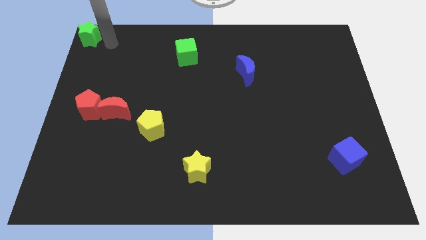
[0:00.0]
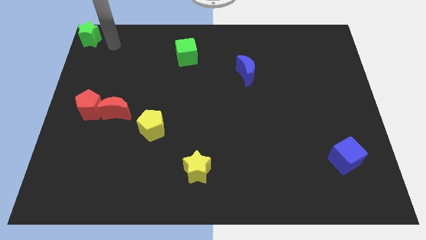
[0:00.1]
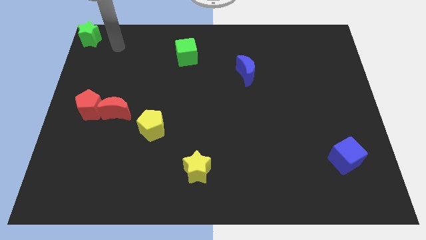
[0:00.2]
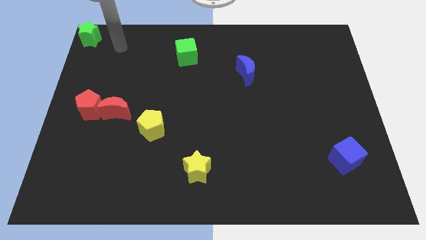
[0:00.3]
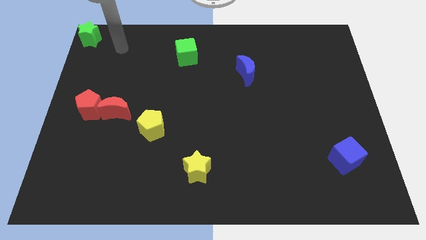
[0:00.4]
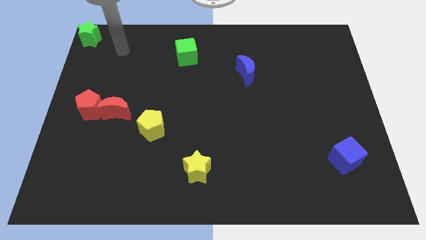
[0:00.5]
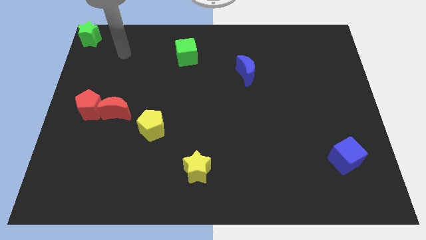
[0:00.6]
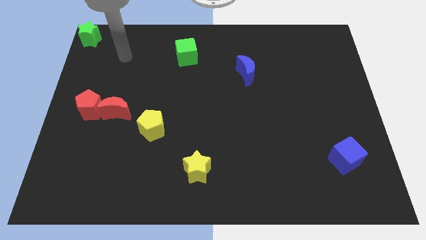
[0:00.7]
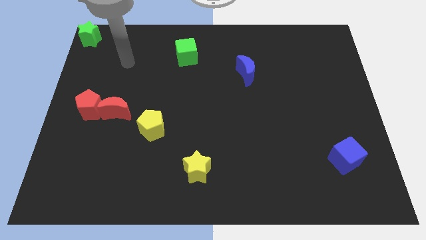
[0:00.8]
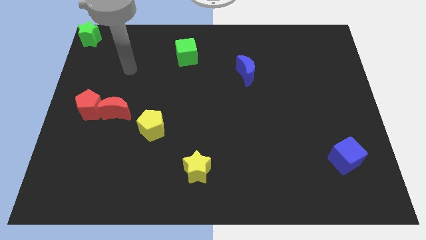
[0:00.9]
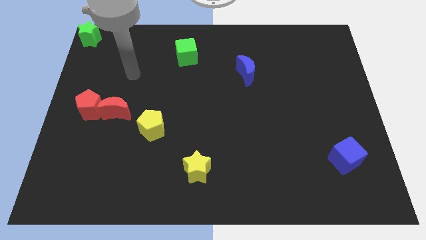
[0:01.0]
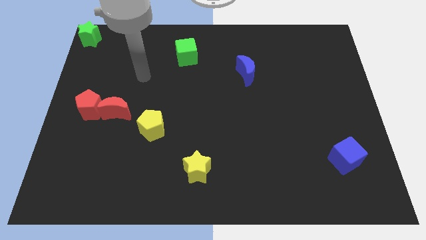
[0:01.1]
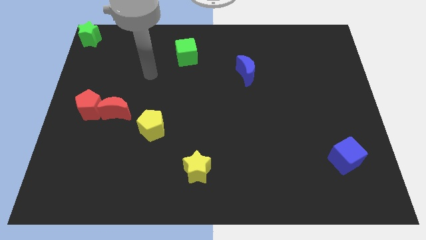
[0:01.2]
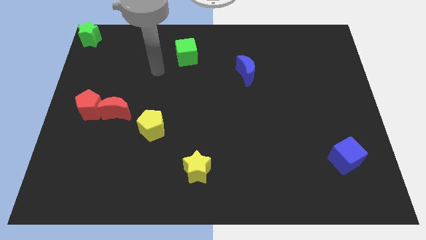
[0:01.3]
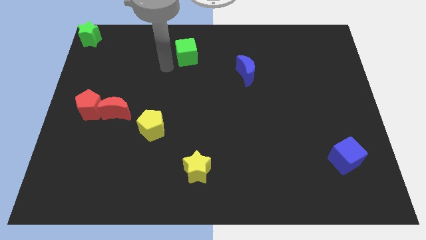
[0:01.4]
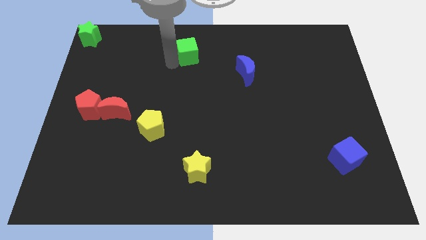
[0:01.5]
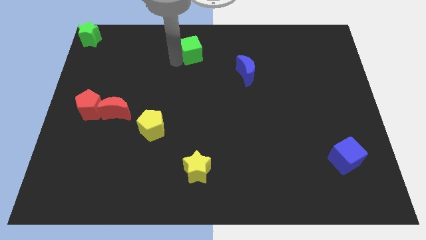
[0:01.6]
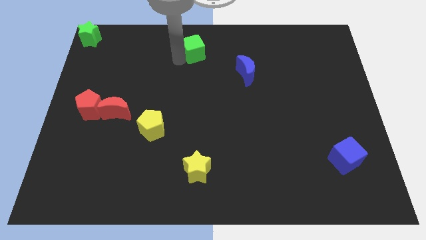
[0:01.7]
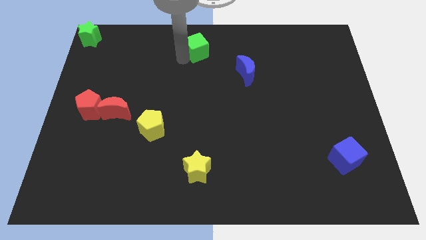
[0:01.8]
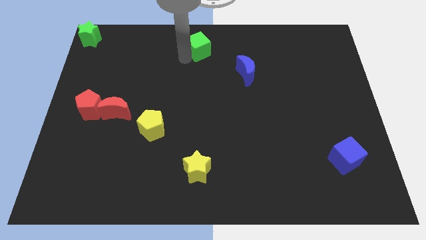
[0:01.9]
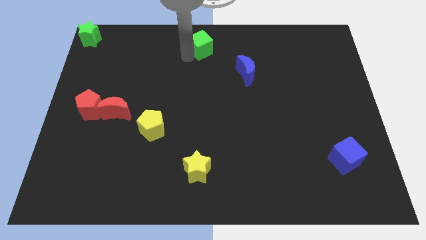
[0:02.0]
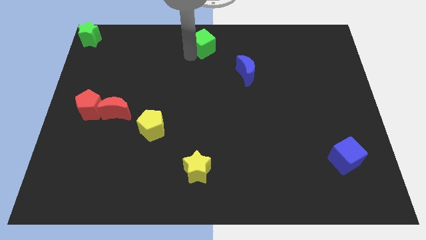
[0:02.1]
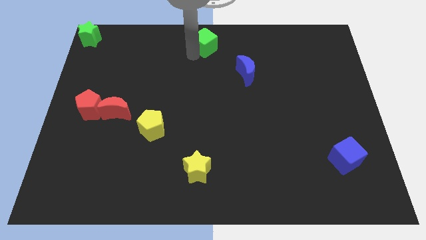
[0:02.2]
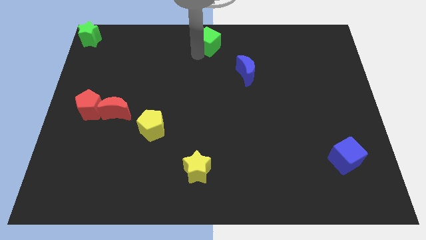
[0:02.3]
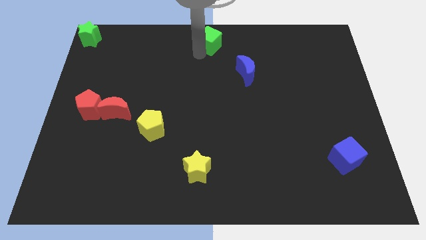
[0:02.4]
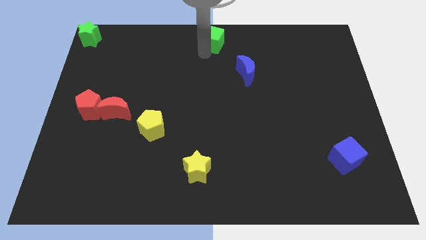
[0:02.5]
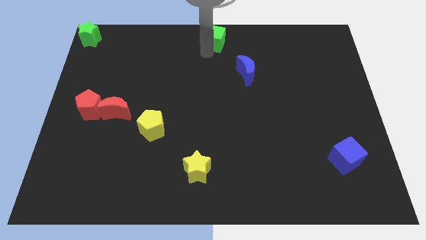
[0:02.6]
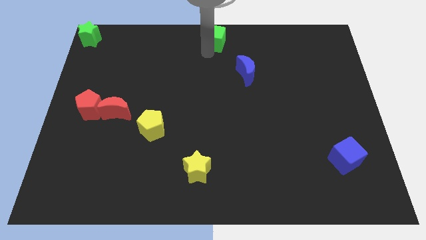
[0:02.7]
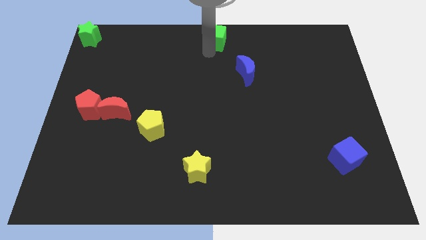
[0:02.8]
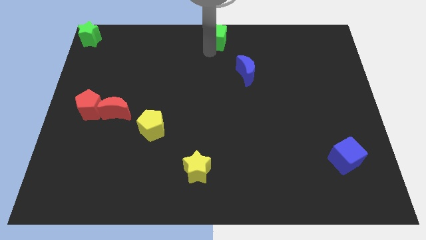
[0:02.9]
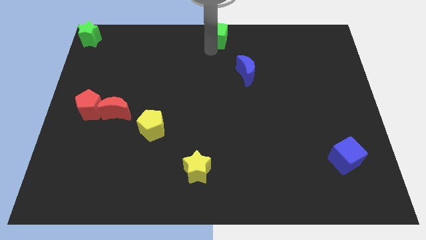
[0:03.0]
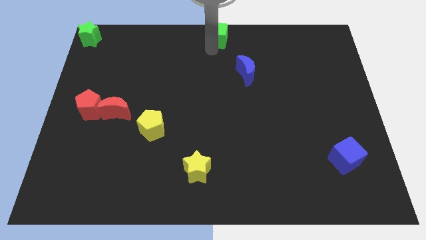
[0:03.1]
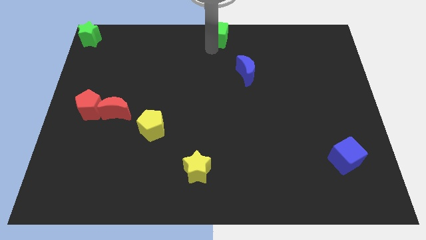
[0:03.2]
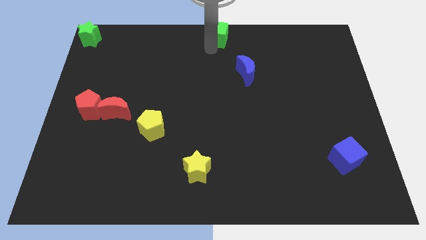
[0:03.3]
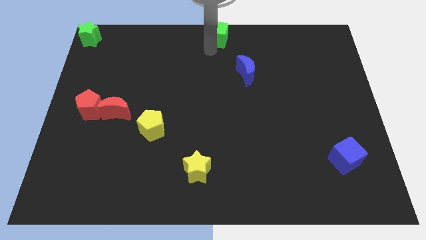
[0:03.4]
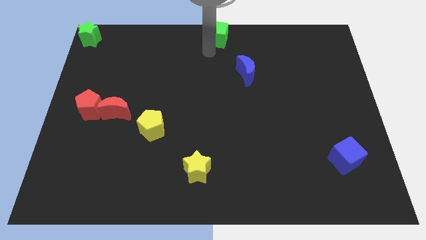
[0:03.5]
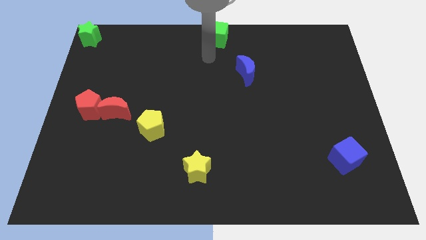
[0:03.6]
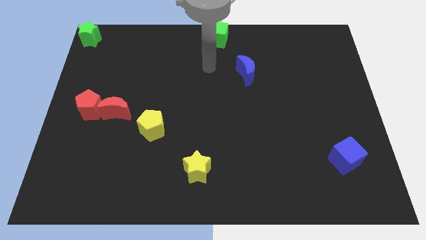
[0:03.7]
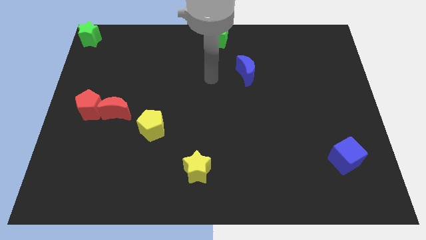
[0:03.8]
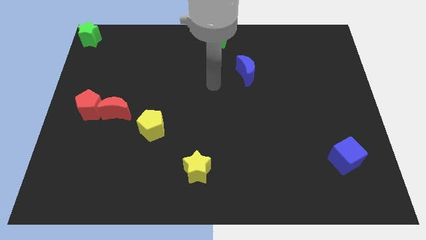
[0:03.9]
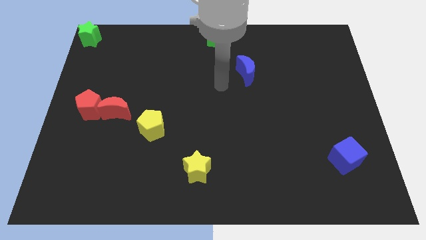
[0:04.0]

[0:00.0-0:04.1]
place the green cube above the blue moon

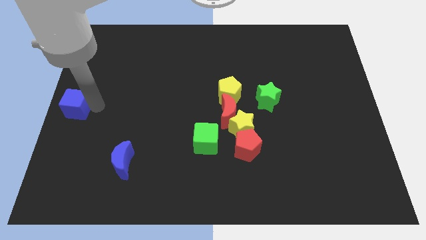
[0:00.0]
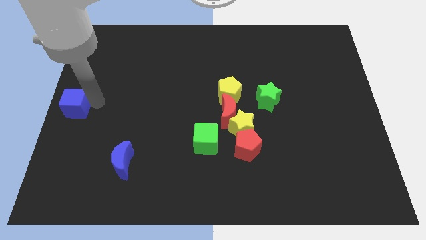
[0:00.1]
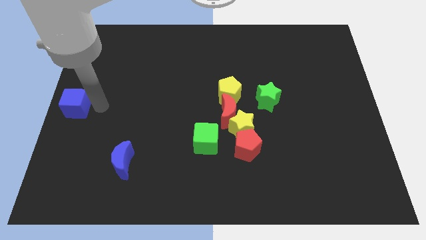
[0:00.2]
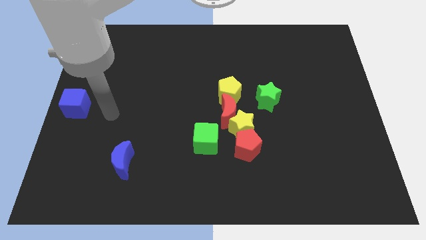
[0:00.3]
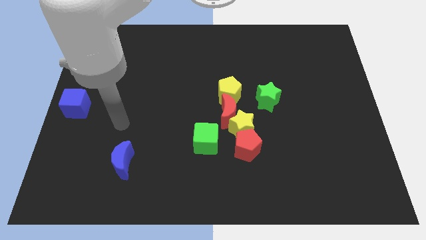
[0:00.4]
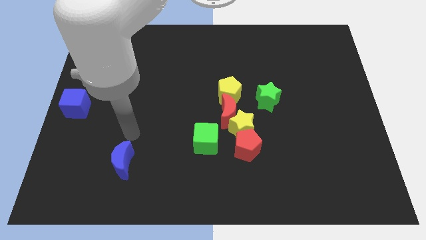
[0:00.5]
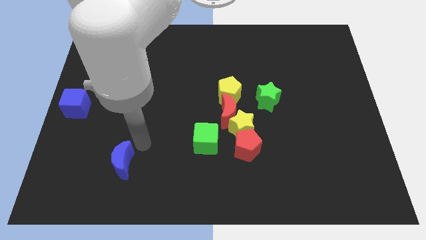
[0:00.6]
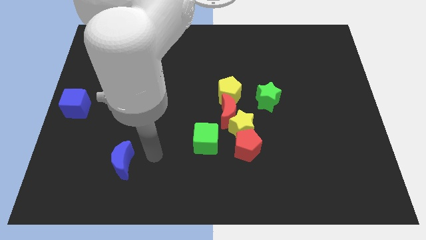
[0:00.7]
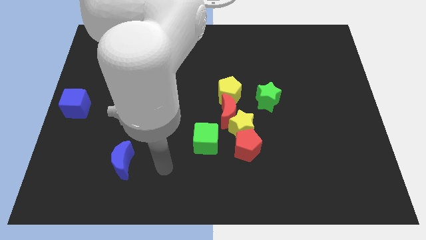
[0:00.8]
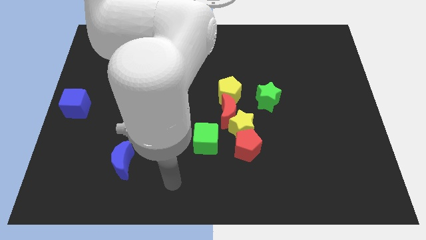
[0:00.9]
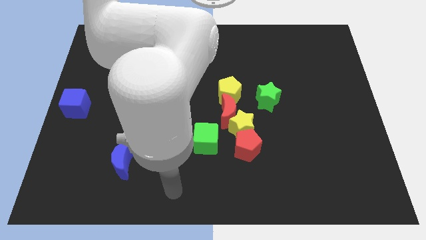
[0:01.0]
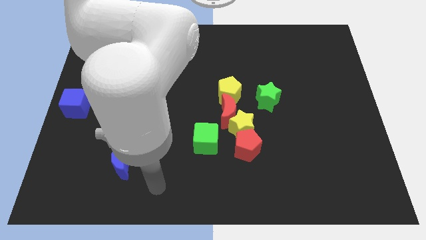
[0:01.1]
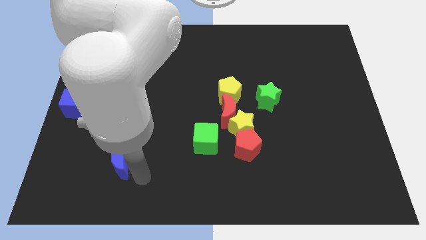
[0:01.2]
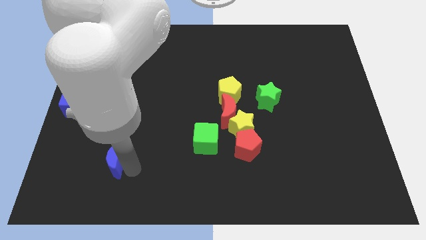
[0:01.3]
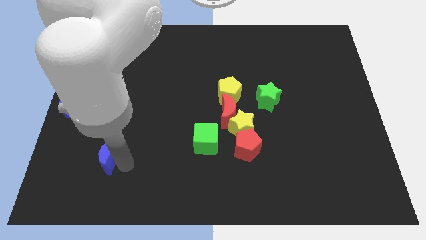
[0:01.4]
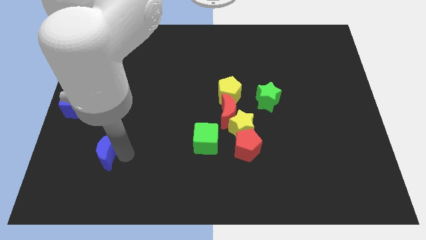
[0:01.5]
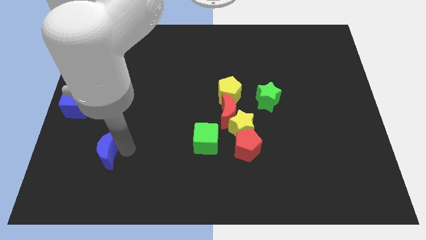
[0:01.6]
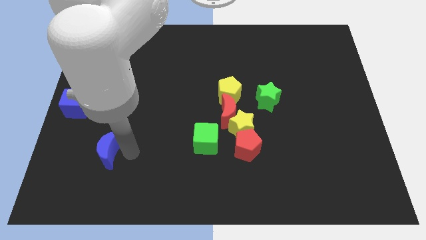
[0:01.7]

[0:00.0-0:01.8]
push the blue crescent slightly to the left

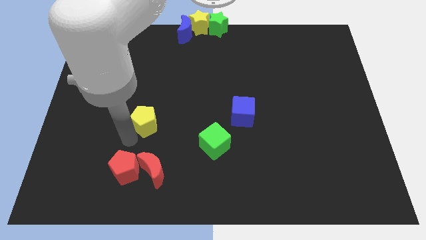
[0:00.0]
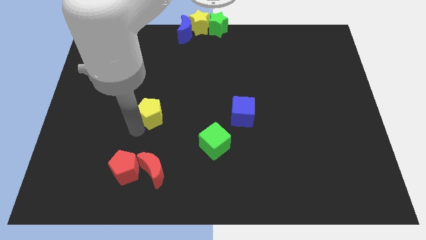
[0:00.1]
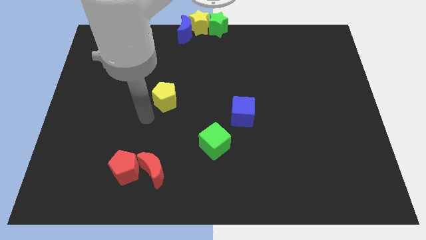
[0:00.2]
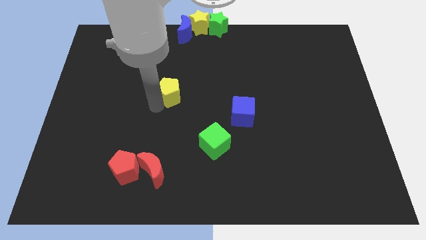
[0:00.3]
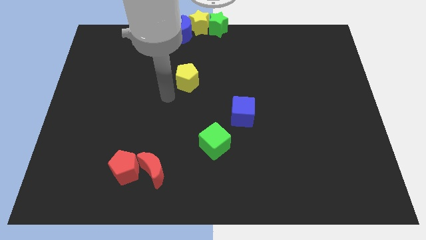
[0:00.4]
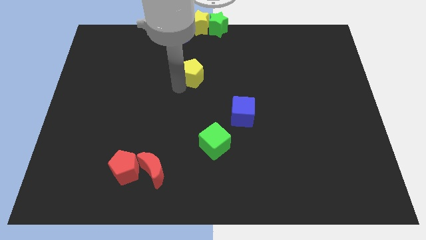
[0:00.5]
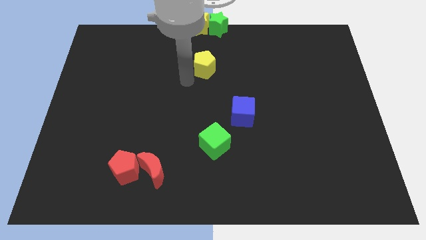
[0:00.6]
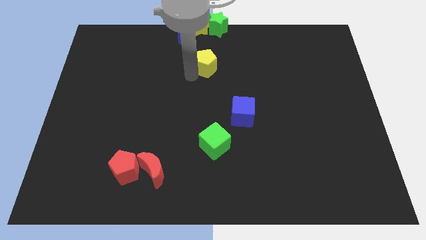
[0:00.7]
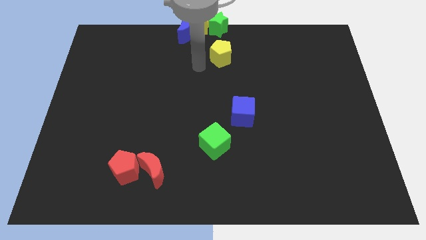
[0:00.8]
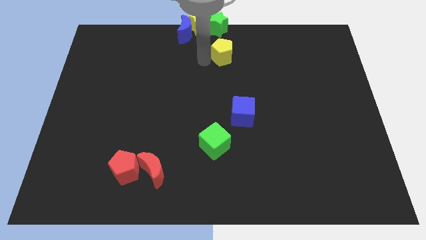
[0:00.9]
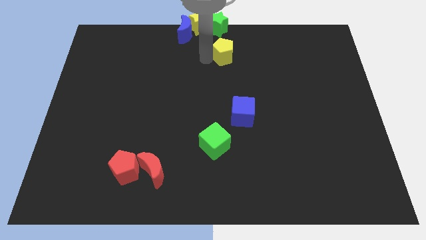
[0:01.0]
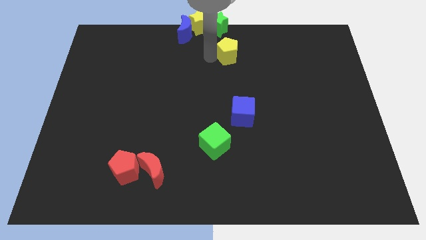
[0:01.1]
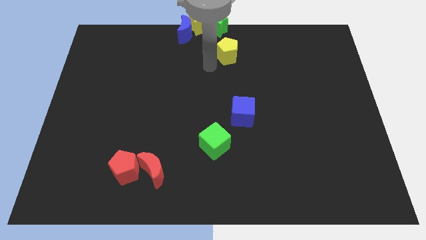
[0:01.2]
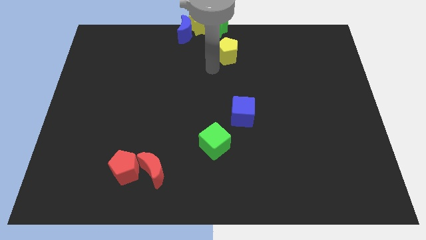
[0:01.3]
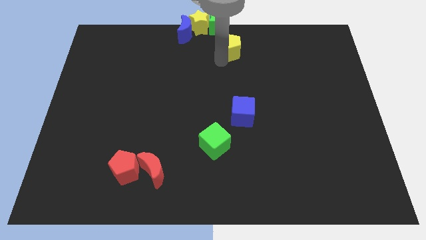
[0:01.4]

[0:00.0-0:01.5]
place the yellow pentagon below the green star

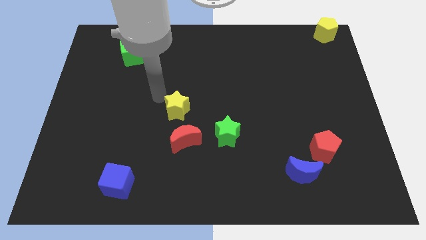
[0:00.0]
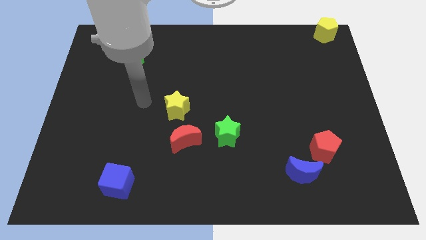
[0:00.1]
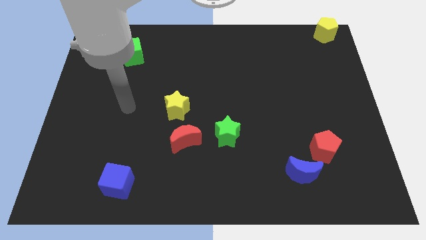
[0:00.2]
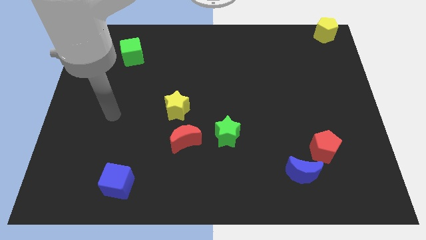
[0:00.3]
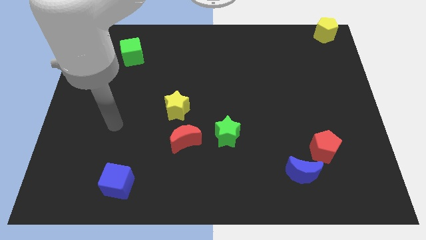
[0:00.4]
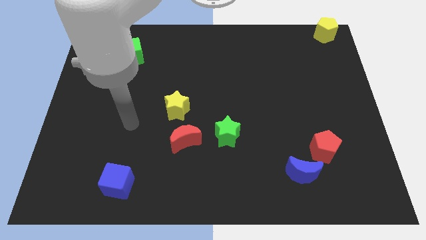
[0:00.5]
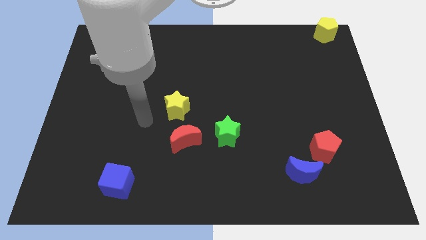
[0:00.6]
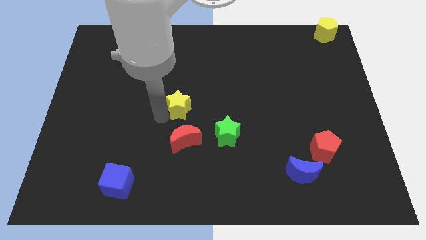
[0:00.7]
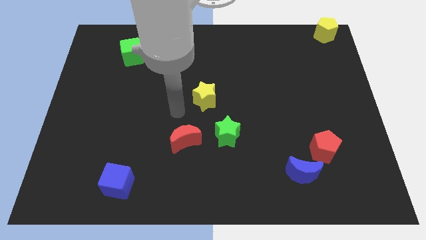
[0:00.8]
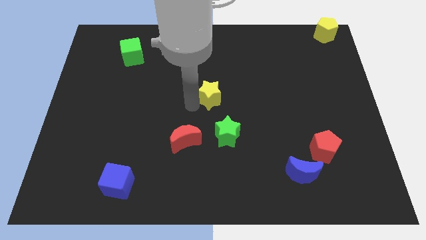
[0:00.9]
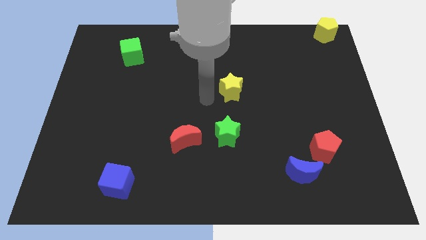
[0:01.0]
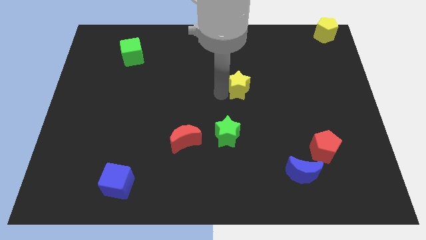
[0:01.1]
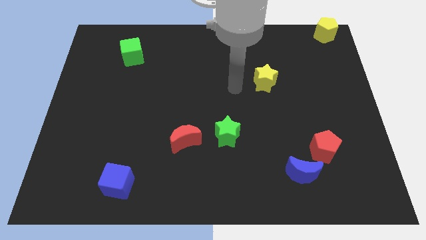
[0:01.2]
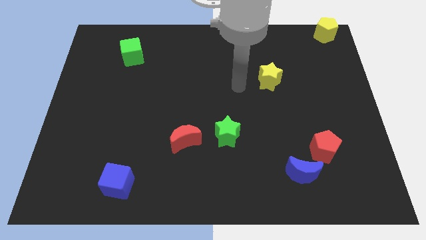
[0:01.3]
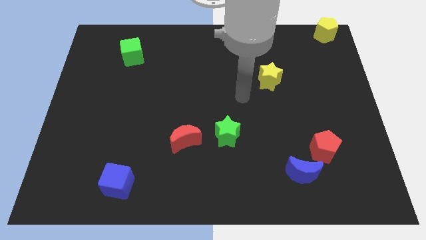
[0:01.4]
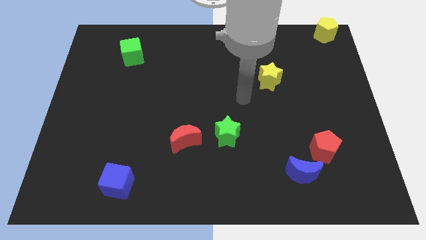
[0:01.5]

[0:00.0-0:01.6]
sightly push the yellow star towards the yellow pentagon
